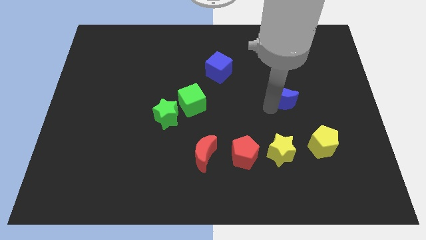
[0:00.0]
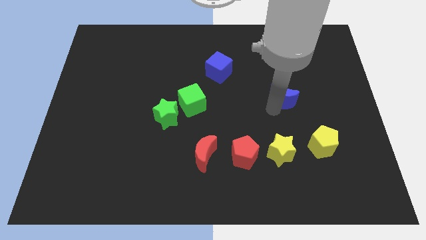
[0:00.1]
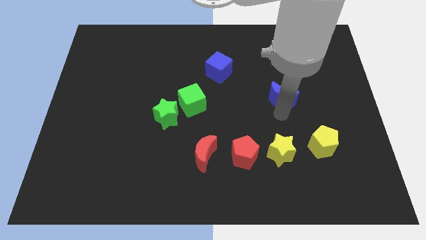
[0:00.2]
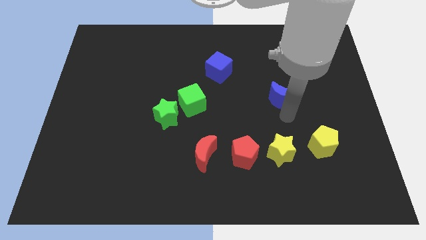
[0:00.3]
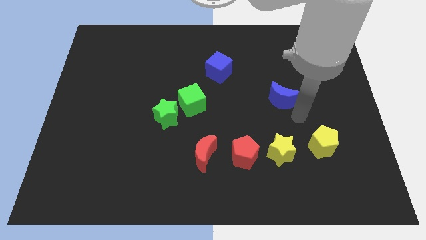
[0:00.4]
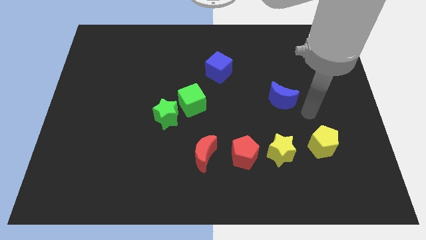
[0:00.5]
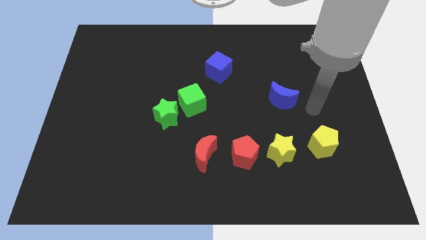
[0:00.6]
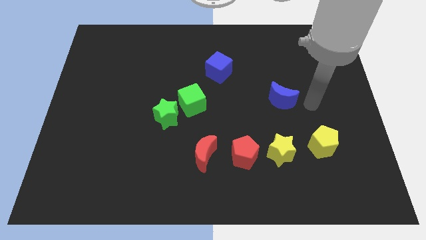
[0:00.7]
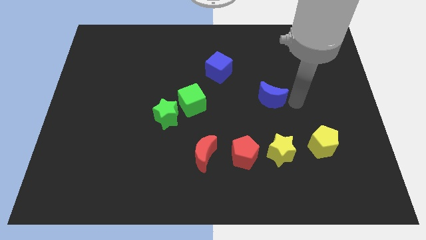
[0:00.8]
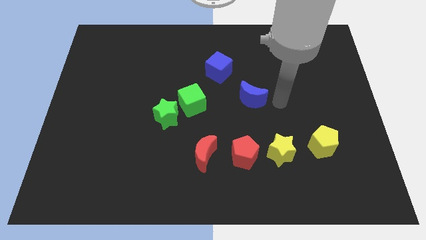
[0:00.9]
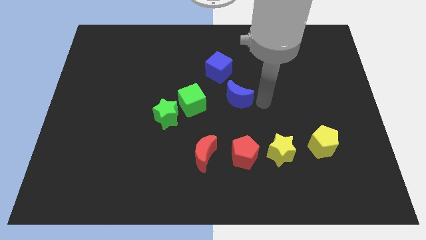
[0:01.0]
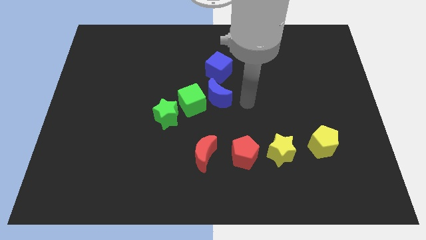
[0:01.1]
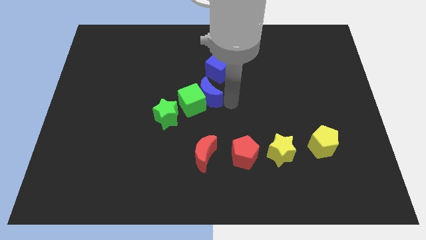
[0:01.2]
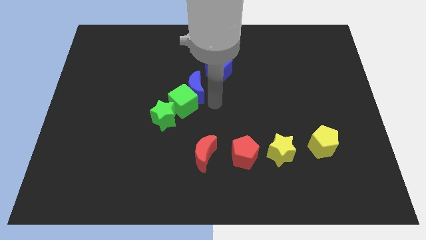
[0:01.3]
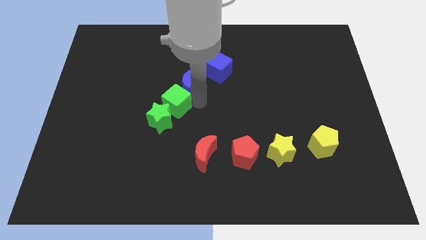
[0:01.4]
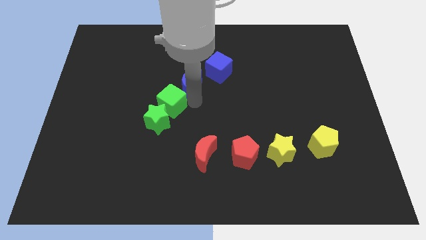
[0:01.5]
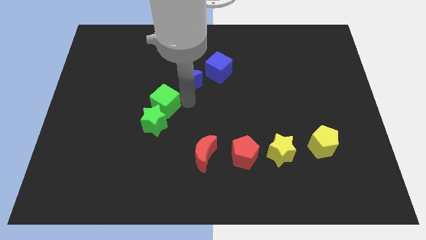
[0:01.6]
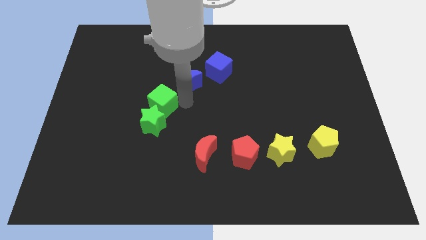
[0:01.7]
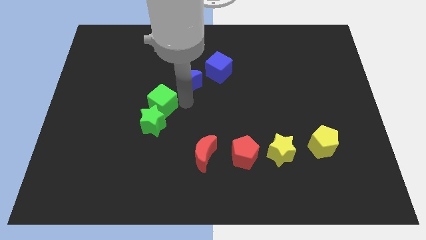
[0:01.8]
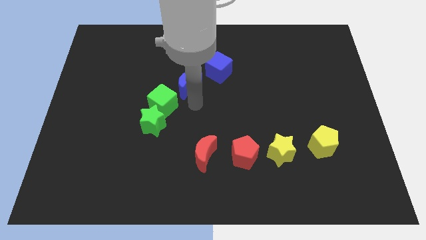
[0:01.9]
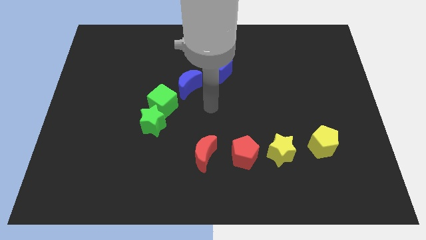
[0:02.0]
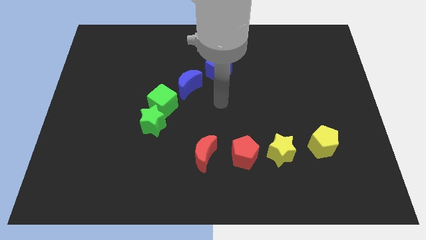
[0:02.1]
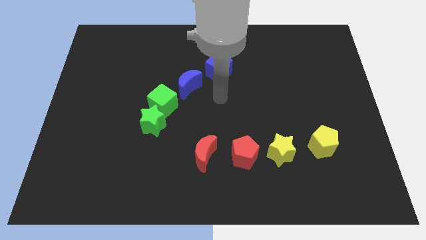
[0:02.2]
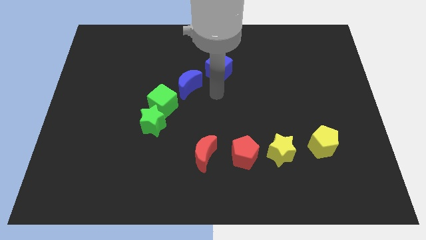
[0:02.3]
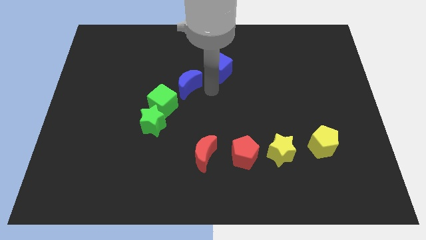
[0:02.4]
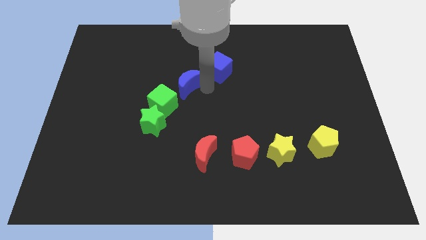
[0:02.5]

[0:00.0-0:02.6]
push the blue moon towards the left side

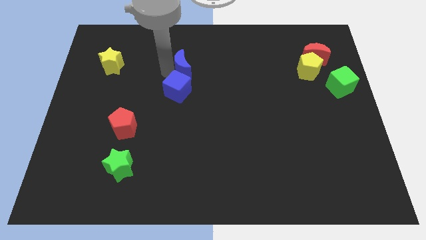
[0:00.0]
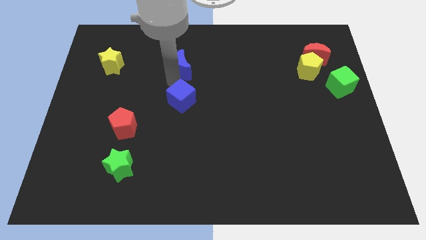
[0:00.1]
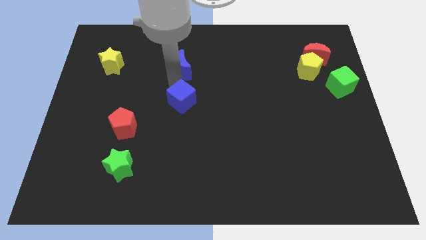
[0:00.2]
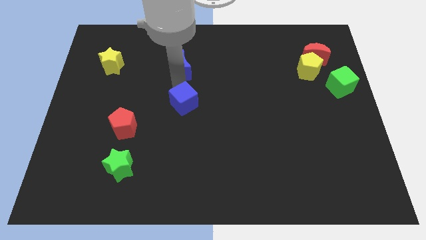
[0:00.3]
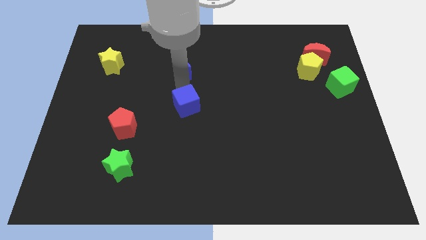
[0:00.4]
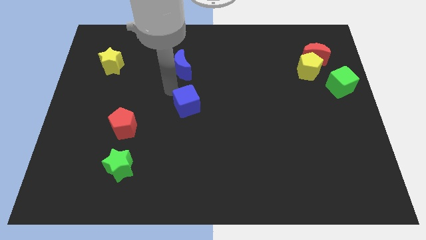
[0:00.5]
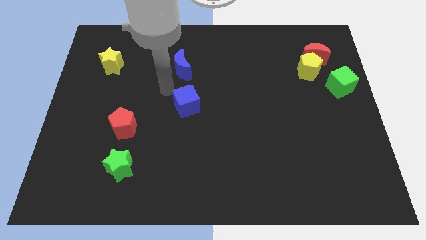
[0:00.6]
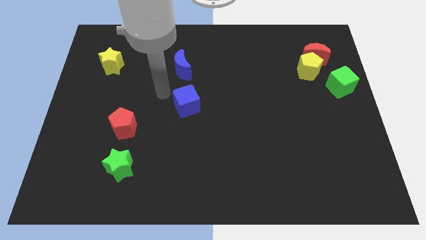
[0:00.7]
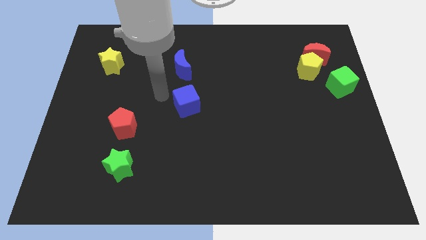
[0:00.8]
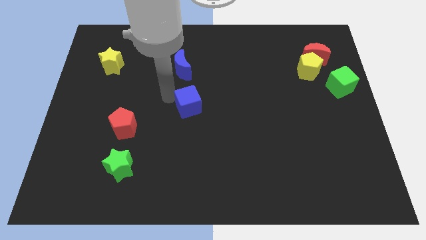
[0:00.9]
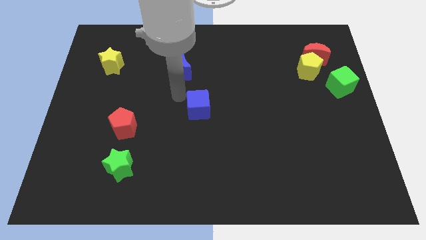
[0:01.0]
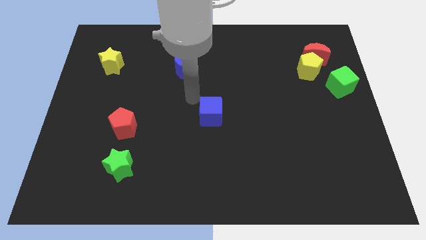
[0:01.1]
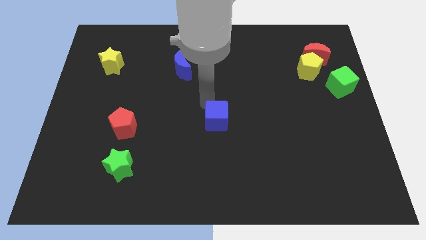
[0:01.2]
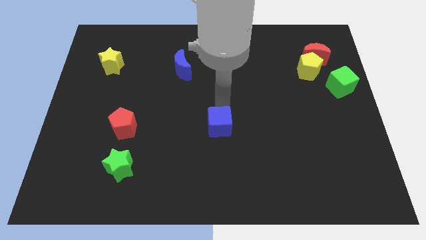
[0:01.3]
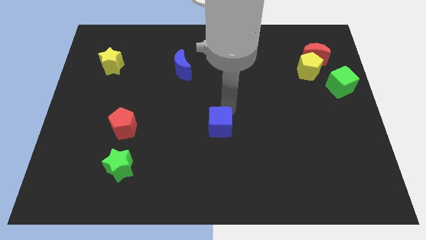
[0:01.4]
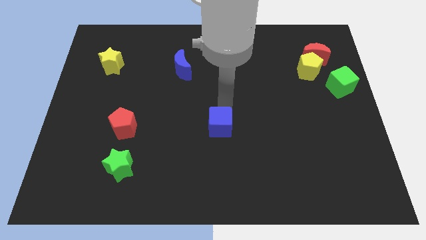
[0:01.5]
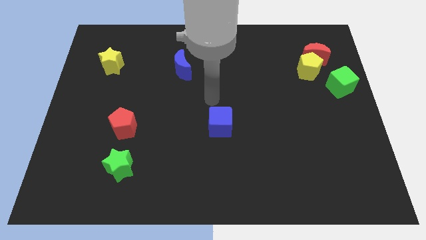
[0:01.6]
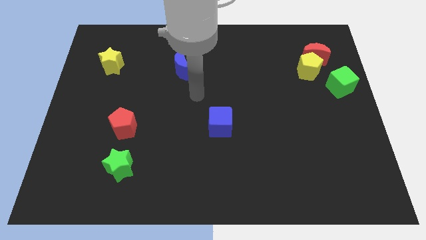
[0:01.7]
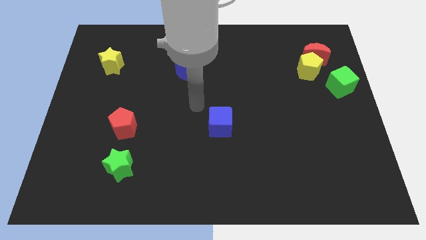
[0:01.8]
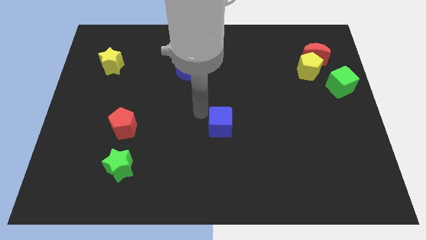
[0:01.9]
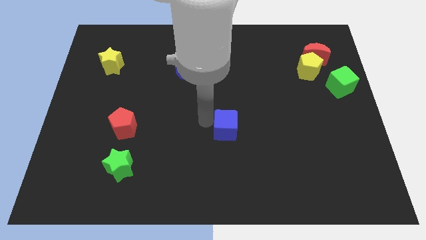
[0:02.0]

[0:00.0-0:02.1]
push the blue cube to the right side of the red pentagon

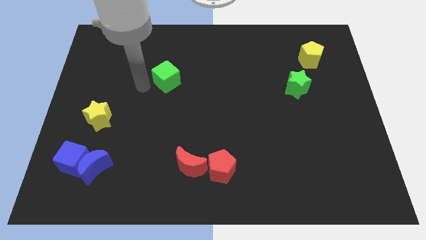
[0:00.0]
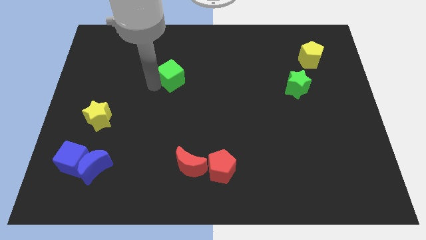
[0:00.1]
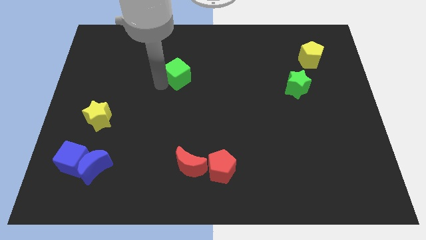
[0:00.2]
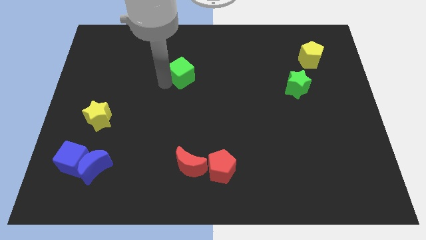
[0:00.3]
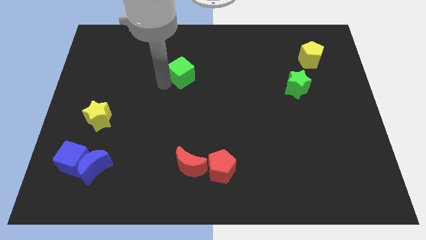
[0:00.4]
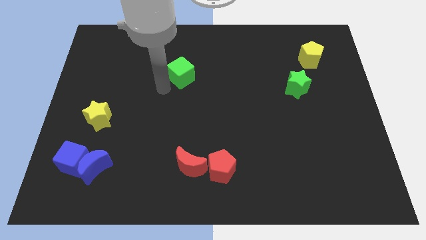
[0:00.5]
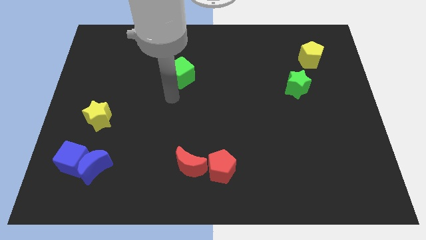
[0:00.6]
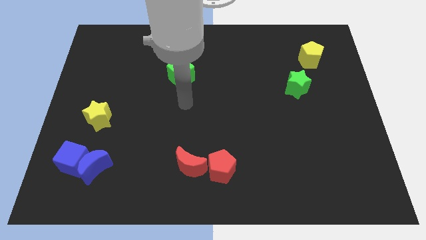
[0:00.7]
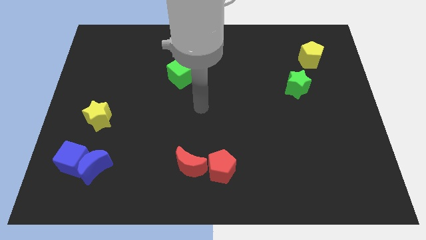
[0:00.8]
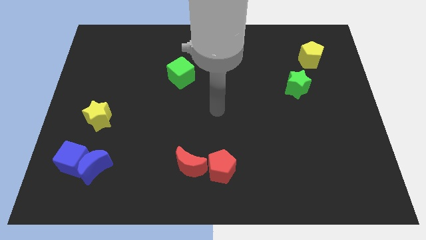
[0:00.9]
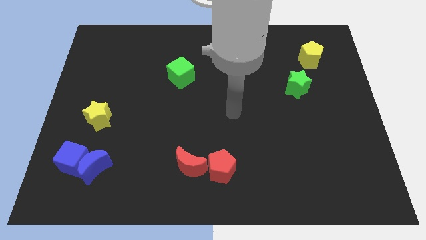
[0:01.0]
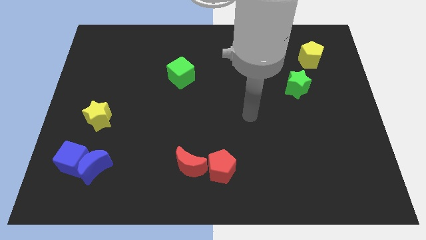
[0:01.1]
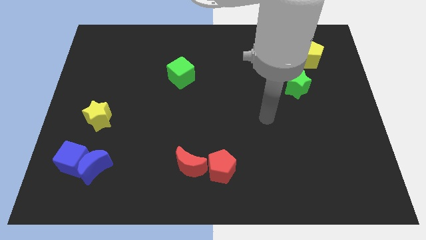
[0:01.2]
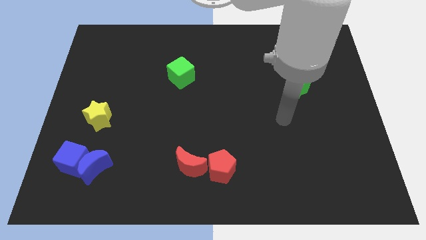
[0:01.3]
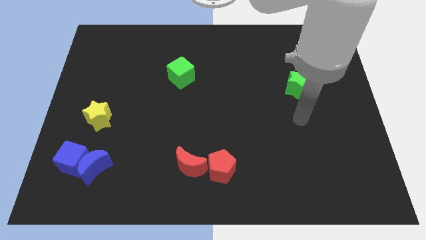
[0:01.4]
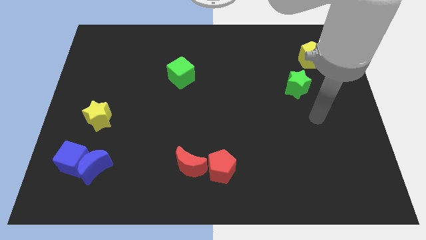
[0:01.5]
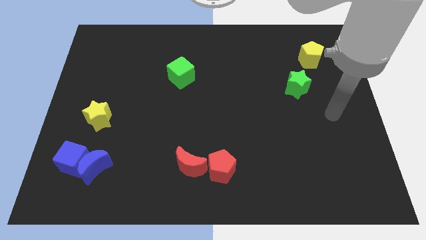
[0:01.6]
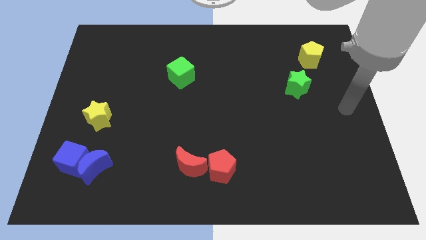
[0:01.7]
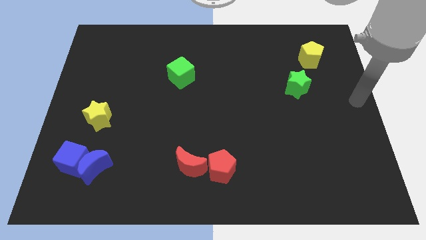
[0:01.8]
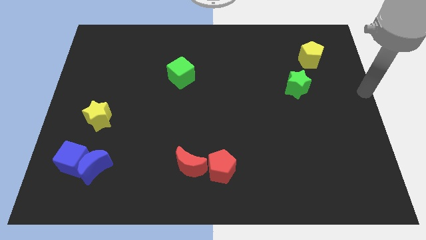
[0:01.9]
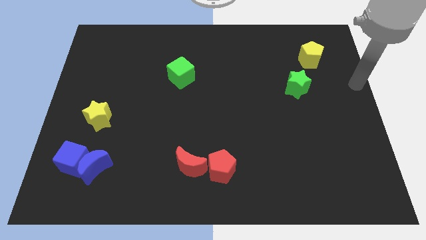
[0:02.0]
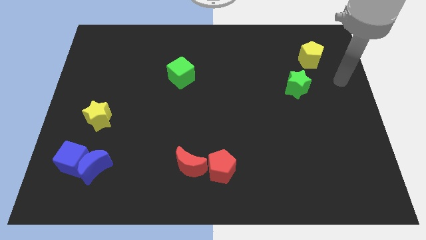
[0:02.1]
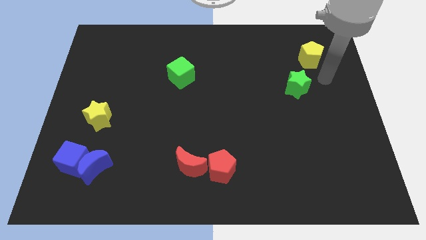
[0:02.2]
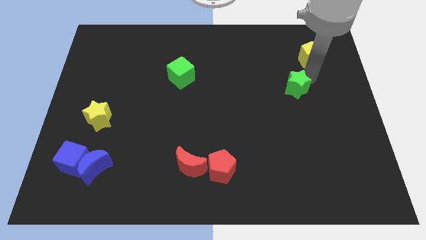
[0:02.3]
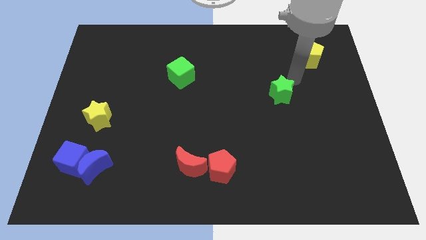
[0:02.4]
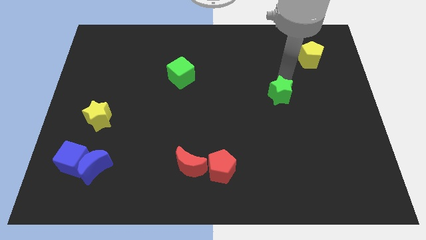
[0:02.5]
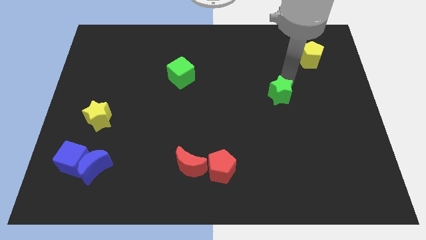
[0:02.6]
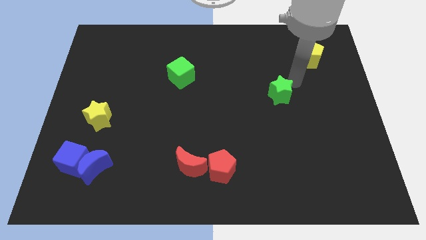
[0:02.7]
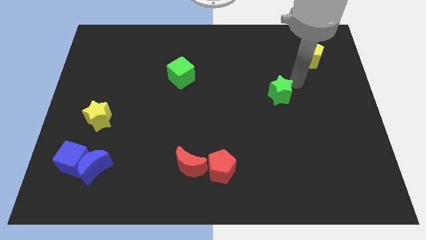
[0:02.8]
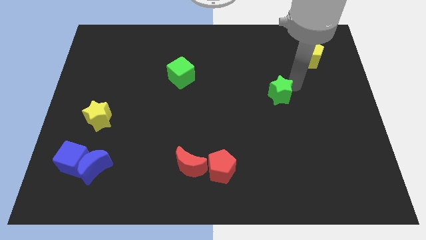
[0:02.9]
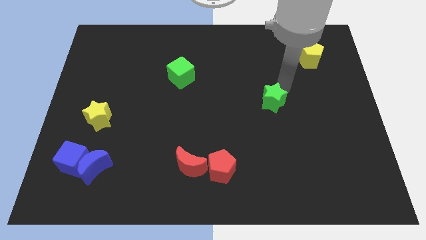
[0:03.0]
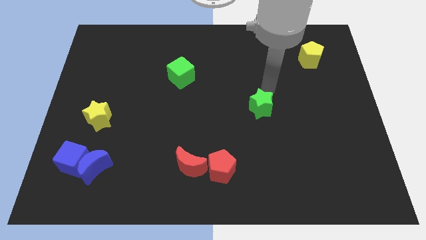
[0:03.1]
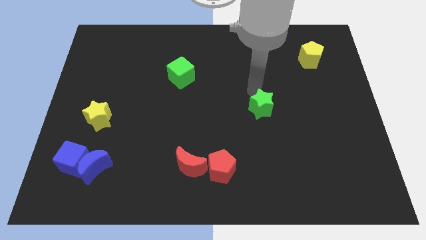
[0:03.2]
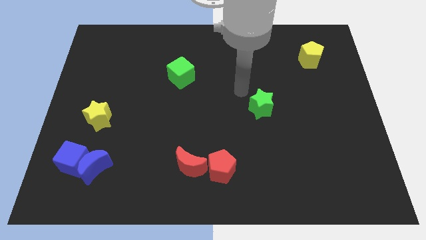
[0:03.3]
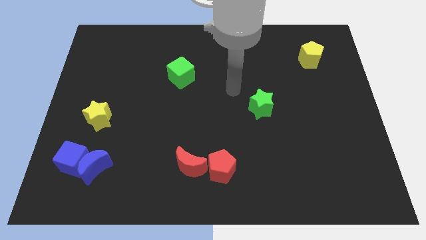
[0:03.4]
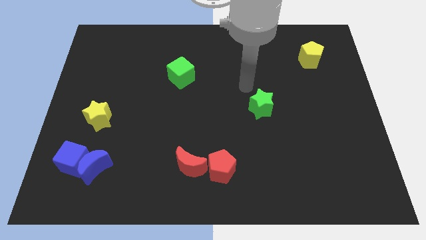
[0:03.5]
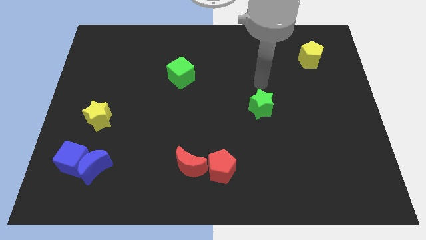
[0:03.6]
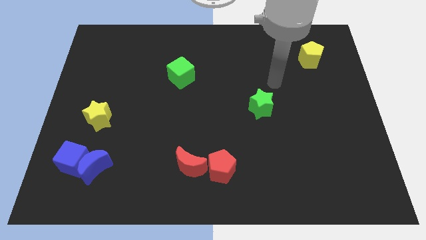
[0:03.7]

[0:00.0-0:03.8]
slightly move the green star towards the bottom

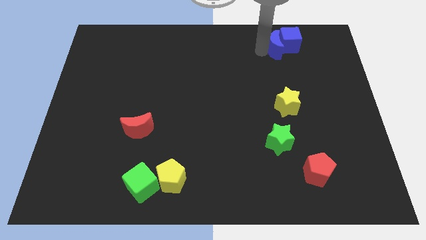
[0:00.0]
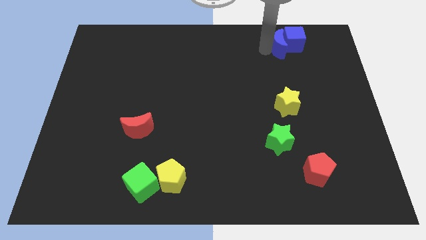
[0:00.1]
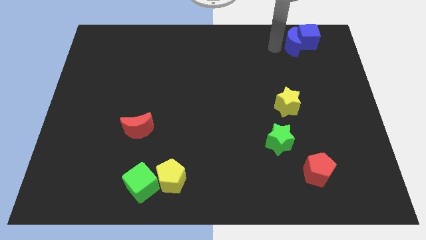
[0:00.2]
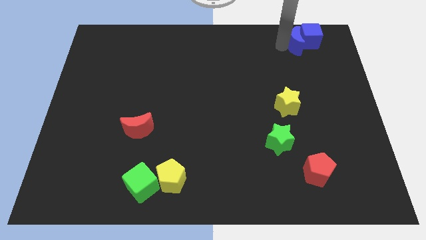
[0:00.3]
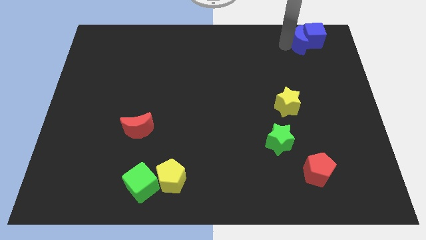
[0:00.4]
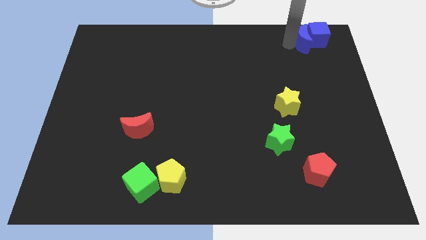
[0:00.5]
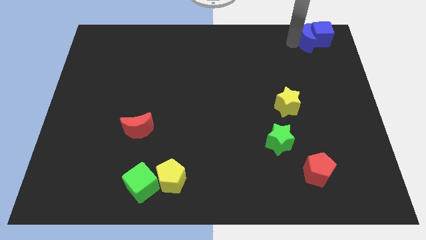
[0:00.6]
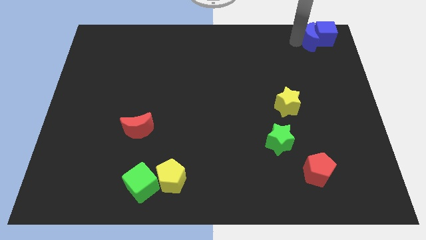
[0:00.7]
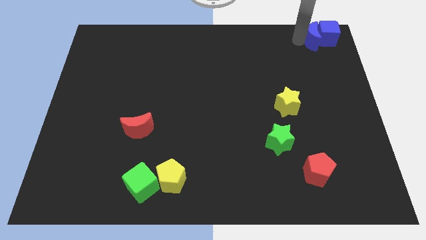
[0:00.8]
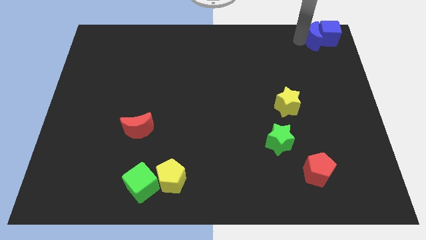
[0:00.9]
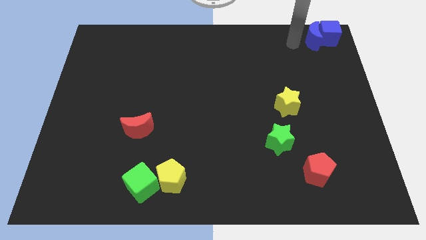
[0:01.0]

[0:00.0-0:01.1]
place the blue blocks at the top right corner of the board
